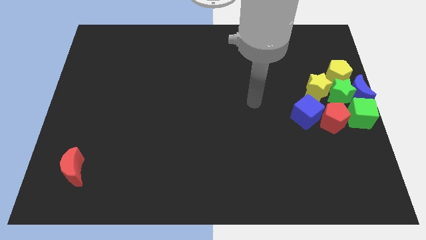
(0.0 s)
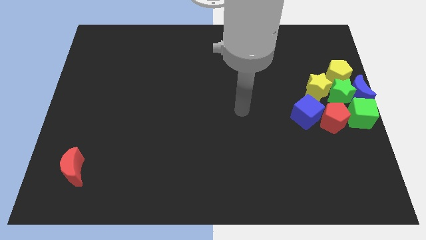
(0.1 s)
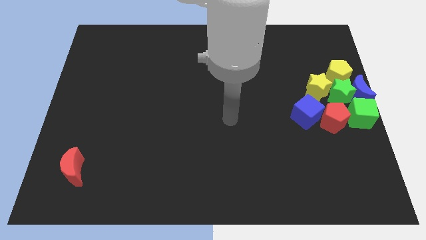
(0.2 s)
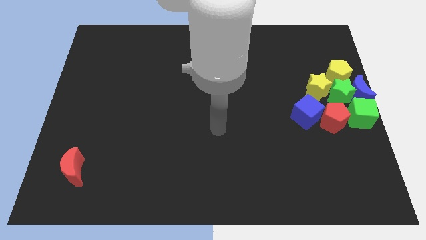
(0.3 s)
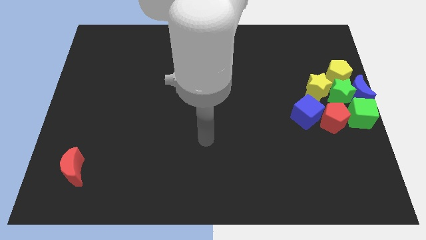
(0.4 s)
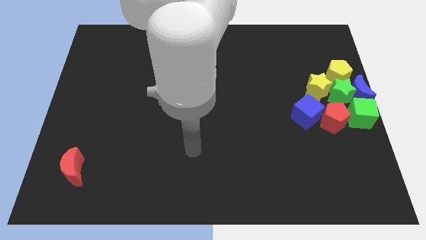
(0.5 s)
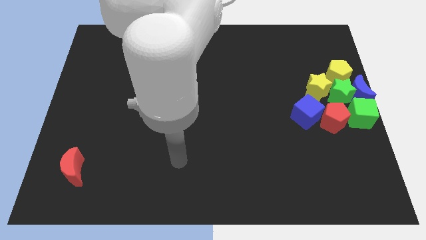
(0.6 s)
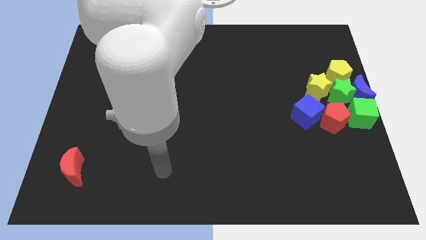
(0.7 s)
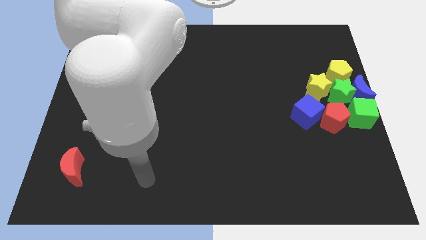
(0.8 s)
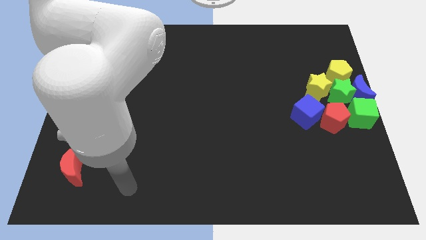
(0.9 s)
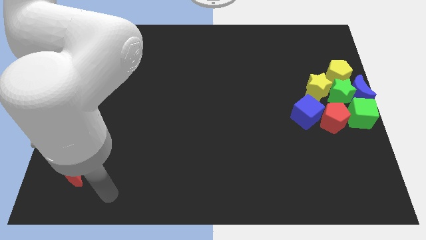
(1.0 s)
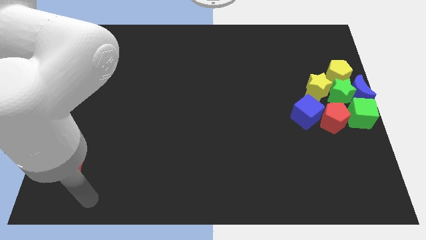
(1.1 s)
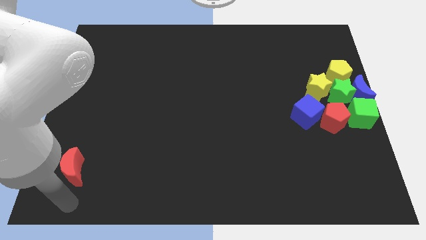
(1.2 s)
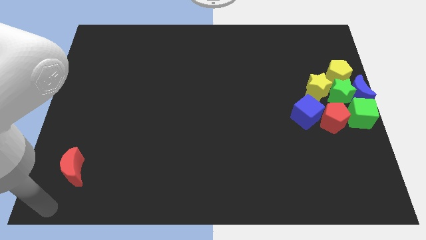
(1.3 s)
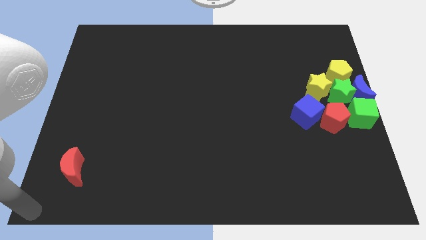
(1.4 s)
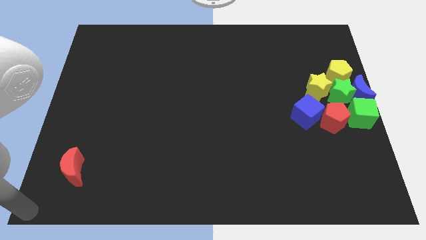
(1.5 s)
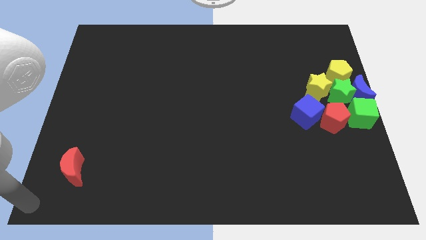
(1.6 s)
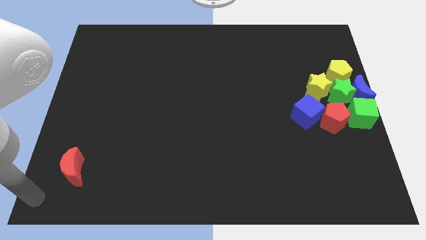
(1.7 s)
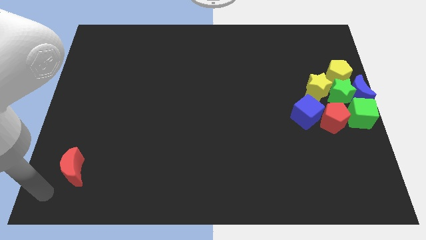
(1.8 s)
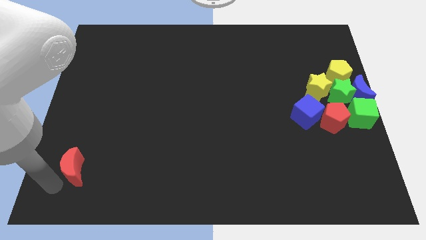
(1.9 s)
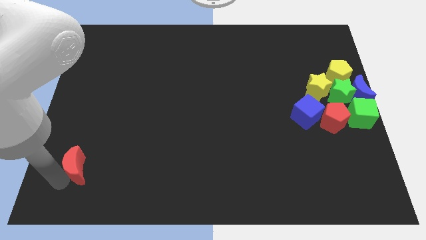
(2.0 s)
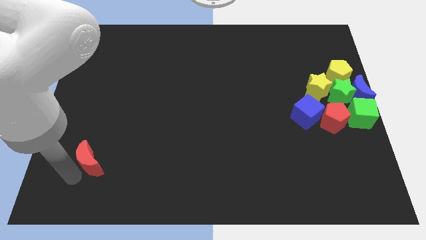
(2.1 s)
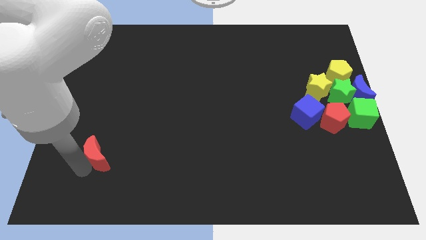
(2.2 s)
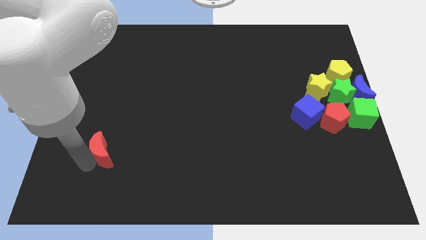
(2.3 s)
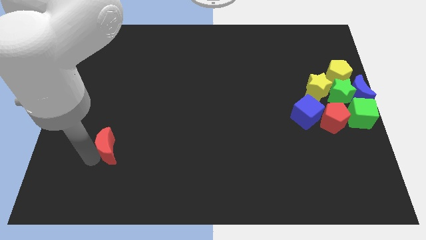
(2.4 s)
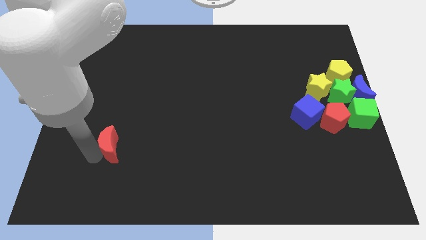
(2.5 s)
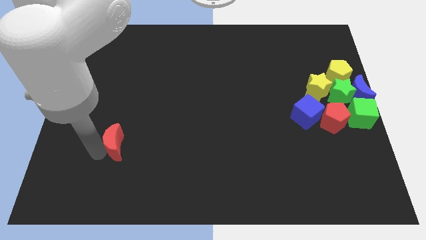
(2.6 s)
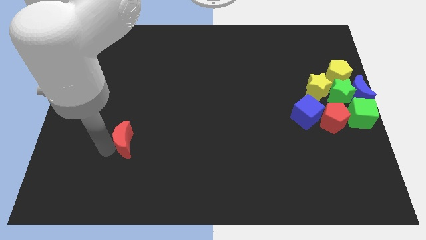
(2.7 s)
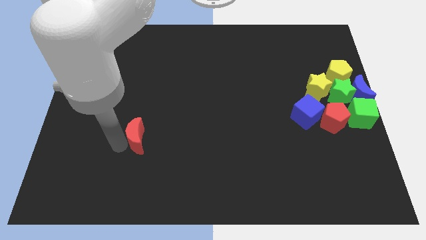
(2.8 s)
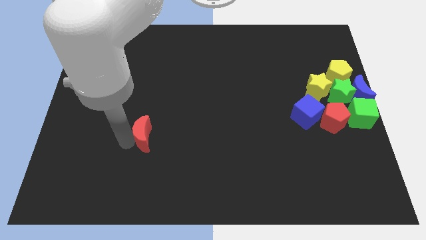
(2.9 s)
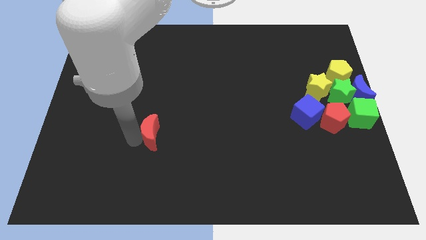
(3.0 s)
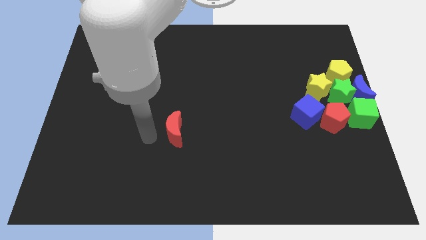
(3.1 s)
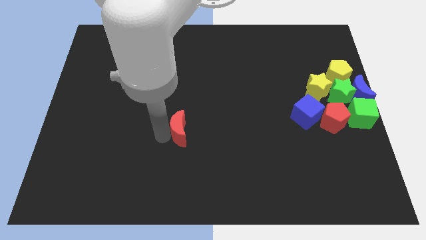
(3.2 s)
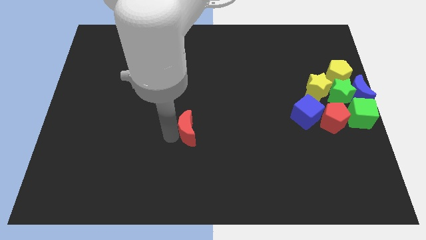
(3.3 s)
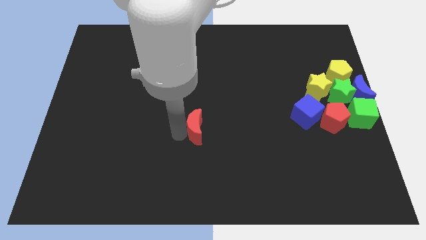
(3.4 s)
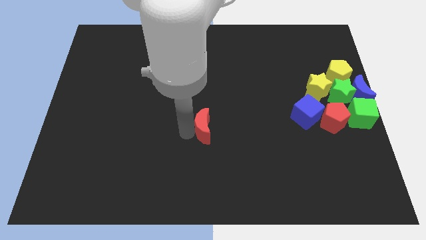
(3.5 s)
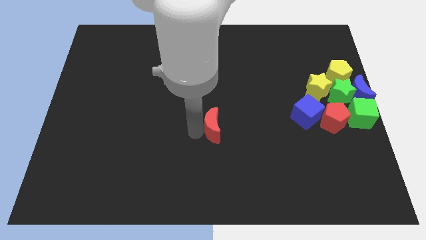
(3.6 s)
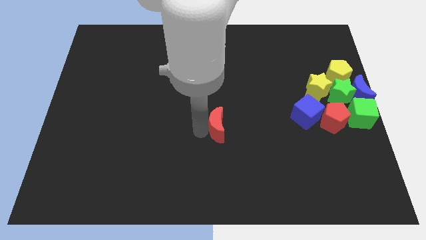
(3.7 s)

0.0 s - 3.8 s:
drag the red moon to the center of the board

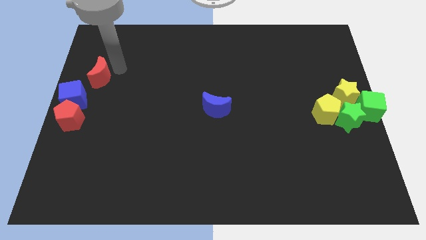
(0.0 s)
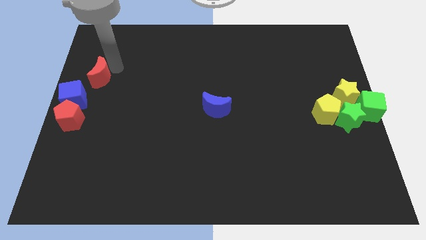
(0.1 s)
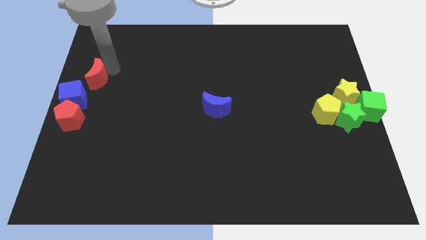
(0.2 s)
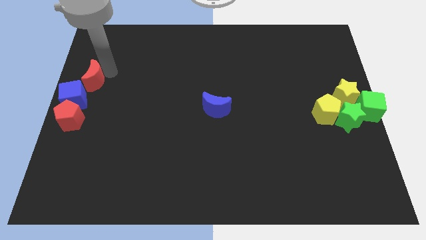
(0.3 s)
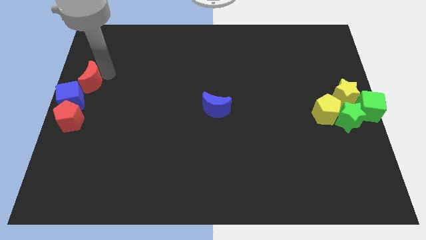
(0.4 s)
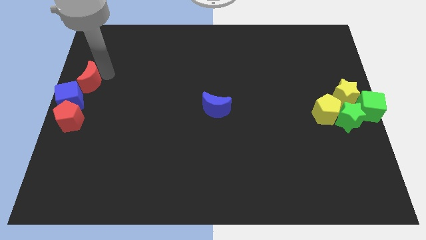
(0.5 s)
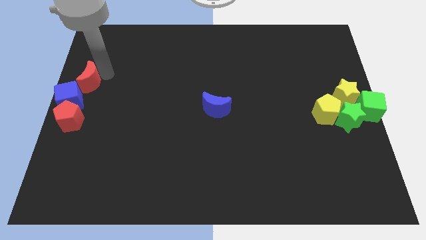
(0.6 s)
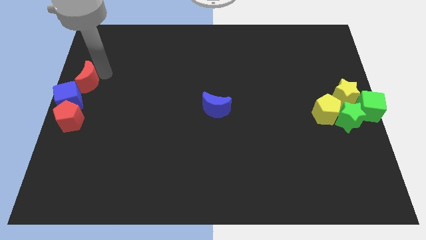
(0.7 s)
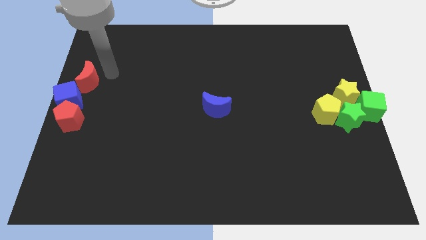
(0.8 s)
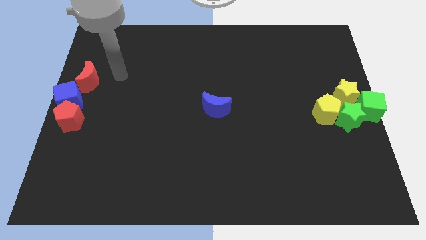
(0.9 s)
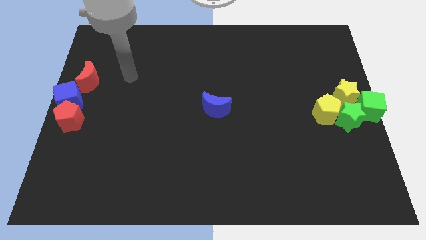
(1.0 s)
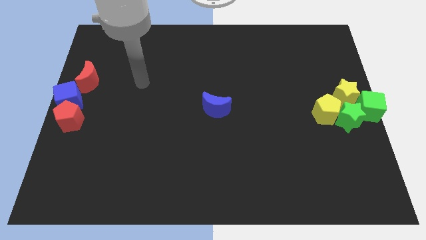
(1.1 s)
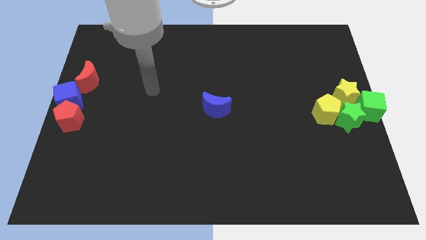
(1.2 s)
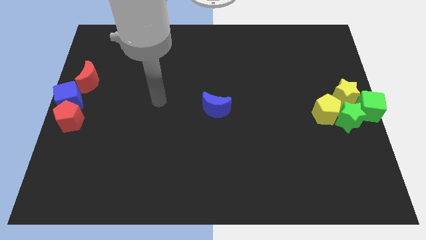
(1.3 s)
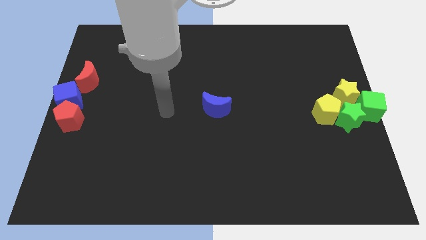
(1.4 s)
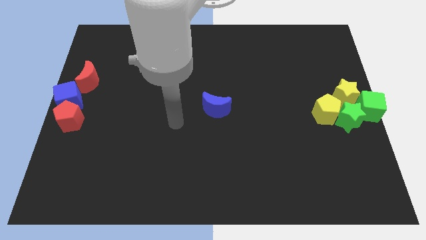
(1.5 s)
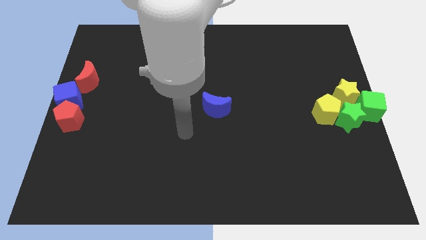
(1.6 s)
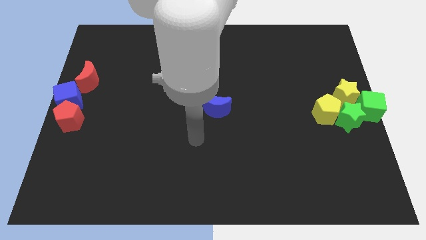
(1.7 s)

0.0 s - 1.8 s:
push the red crescent to the top right side of the blue cube

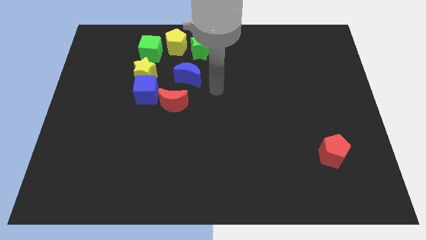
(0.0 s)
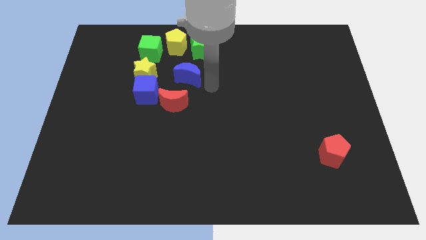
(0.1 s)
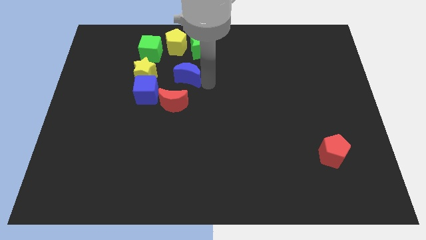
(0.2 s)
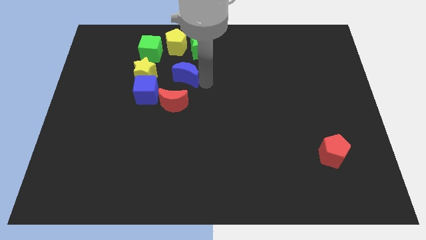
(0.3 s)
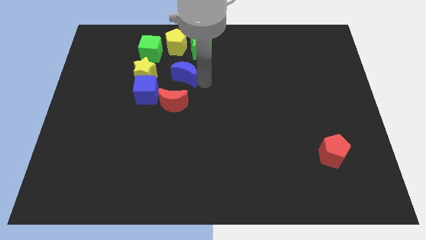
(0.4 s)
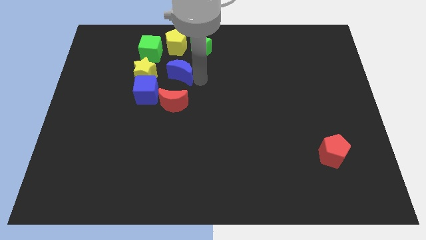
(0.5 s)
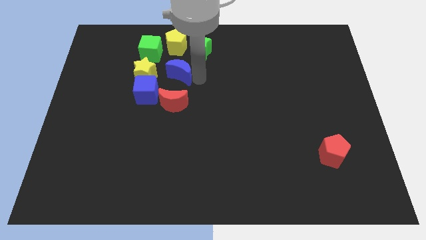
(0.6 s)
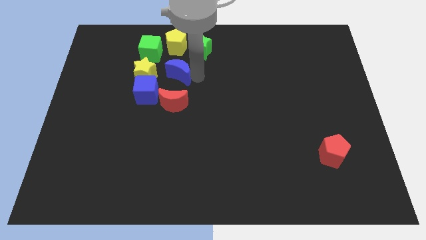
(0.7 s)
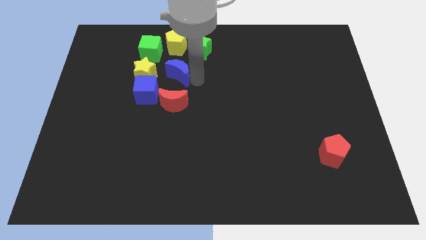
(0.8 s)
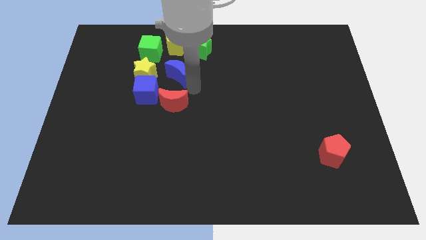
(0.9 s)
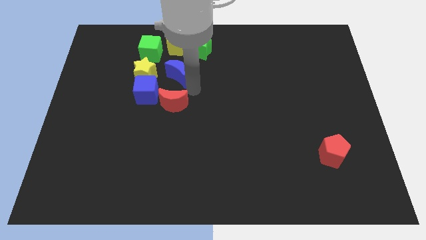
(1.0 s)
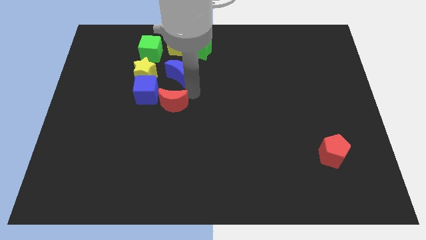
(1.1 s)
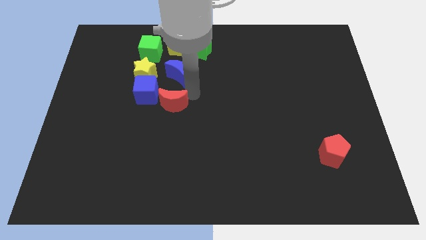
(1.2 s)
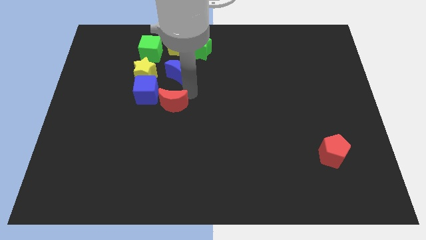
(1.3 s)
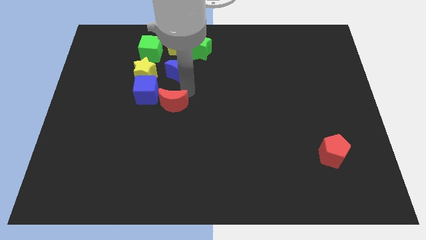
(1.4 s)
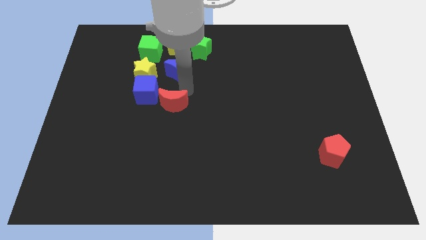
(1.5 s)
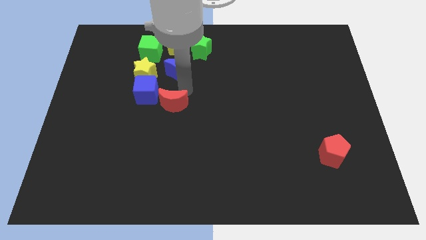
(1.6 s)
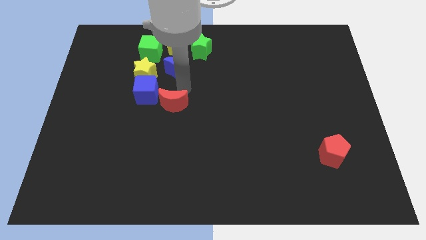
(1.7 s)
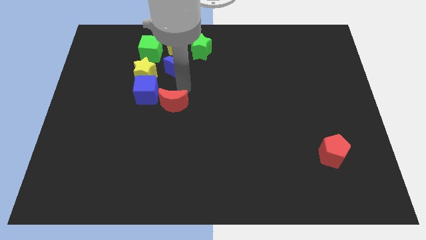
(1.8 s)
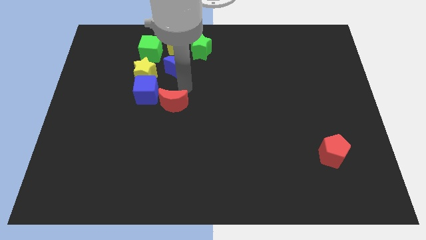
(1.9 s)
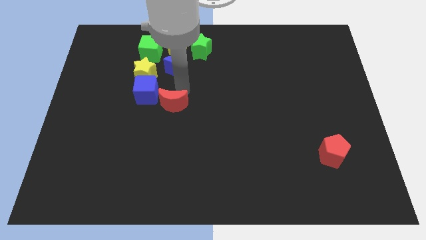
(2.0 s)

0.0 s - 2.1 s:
place the blue moon diagonal to the green cube

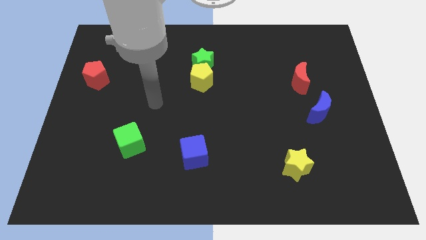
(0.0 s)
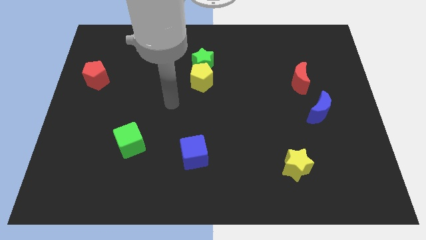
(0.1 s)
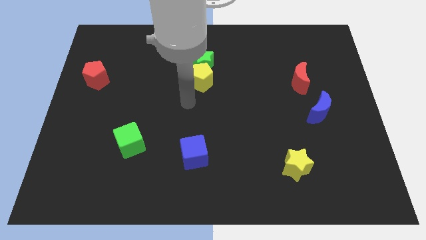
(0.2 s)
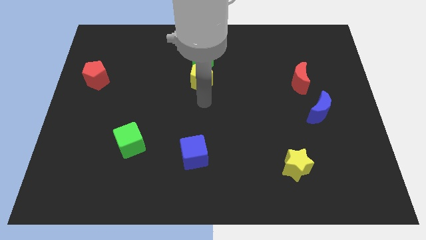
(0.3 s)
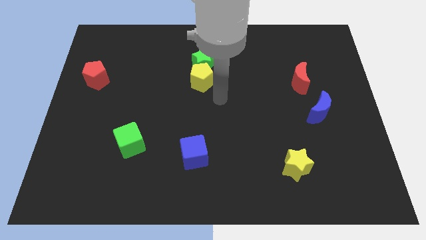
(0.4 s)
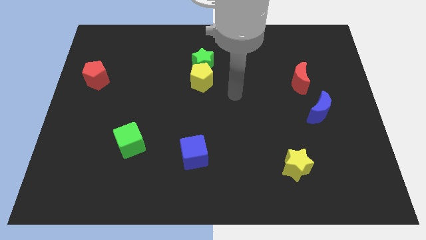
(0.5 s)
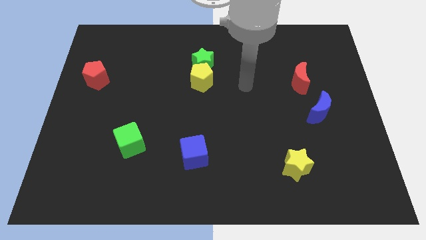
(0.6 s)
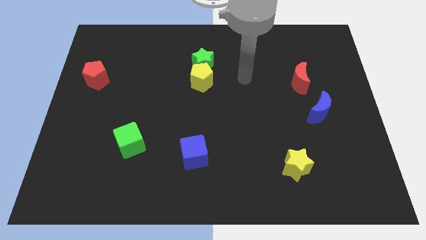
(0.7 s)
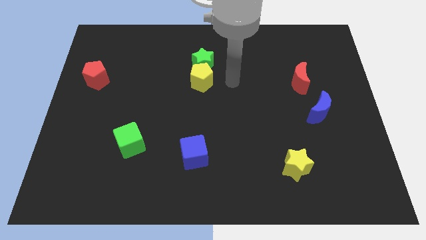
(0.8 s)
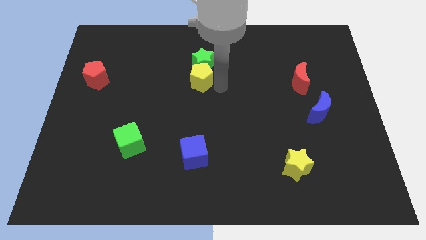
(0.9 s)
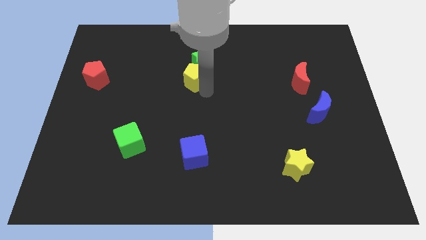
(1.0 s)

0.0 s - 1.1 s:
slightly move your arm towards the yellow pentagon
